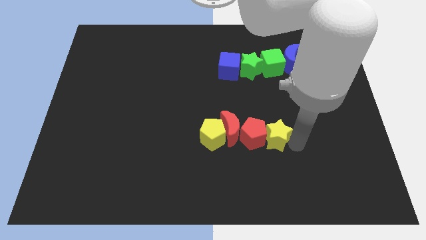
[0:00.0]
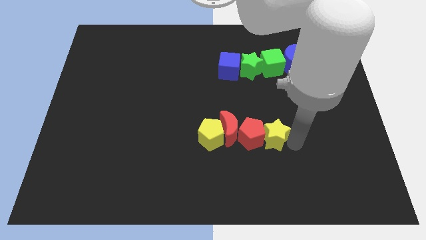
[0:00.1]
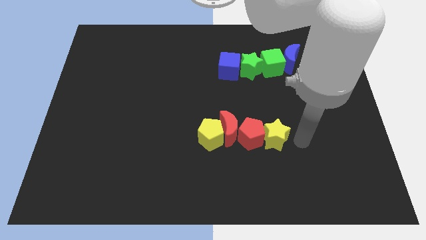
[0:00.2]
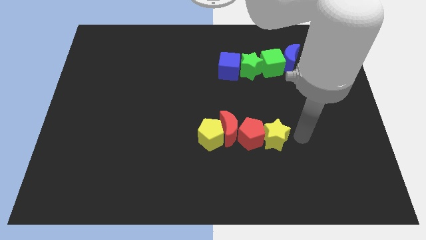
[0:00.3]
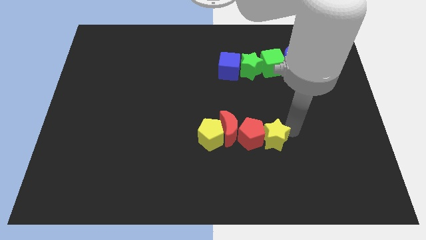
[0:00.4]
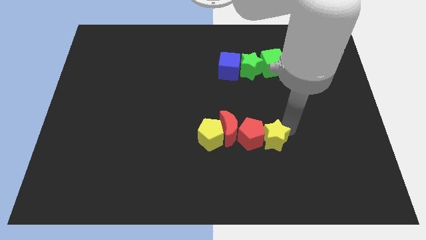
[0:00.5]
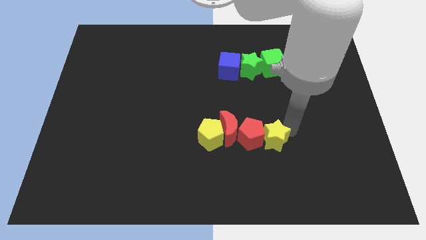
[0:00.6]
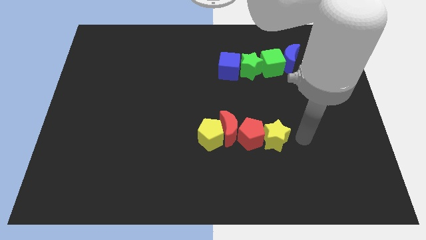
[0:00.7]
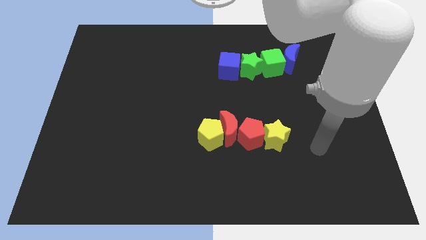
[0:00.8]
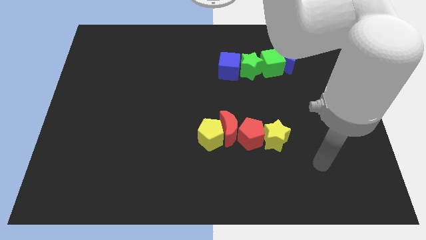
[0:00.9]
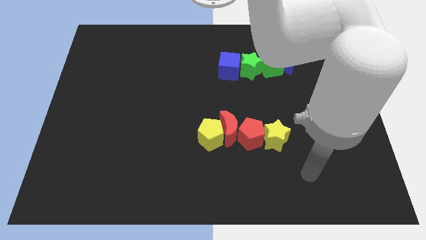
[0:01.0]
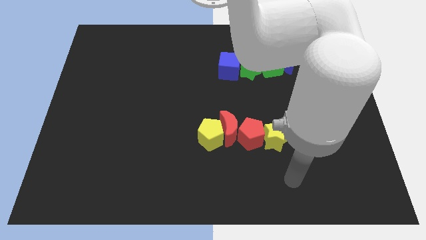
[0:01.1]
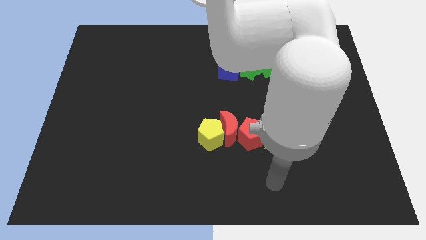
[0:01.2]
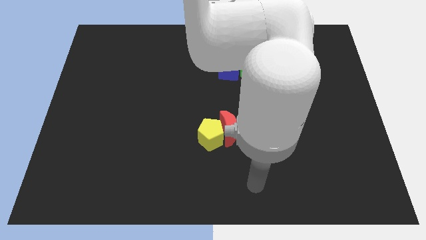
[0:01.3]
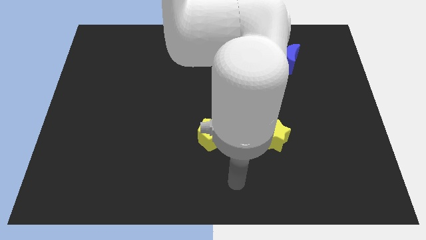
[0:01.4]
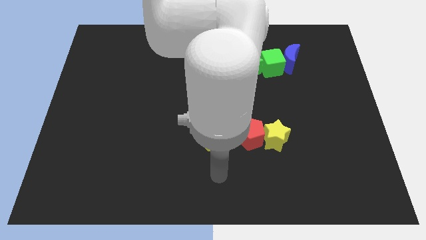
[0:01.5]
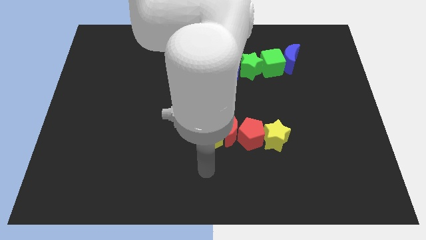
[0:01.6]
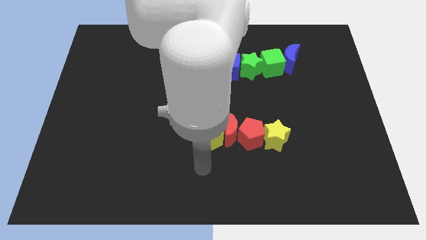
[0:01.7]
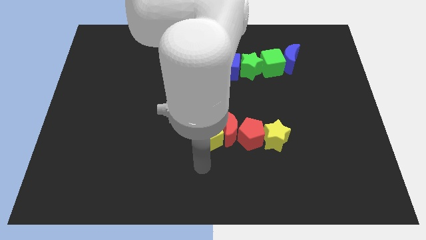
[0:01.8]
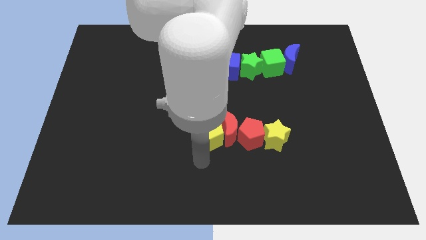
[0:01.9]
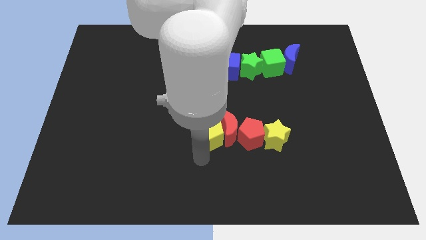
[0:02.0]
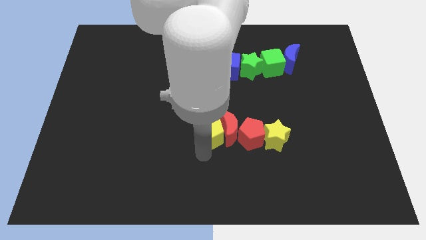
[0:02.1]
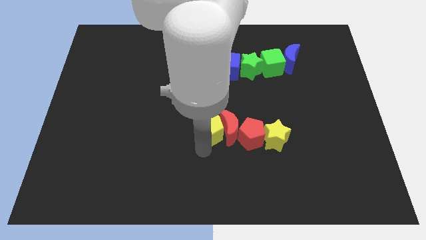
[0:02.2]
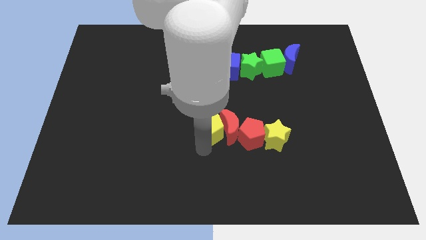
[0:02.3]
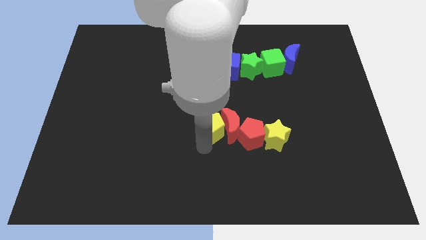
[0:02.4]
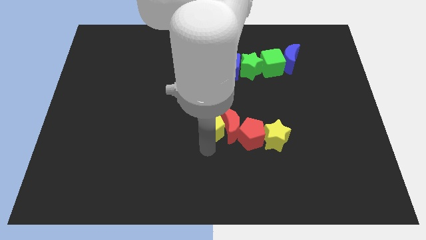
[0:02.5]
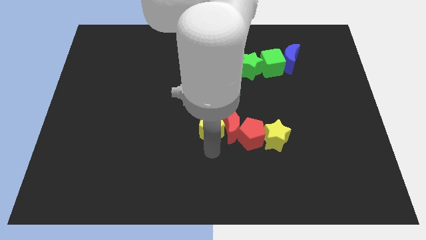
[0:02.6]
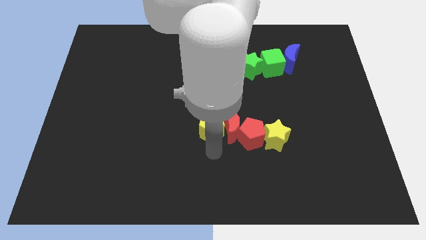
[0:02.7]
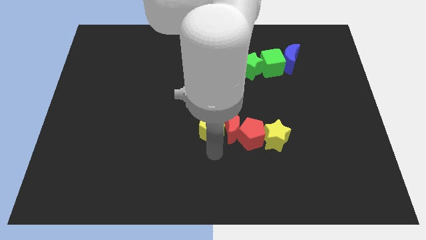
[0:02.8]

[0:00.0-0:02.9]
move your arm from yellow star to the bottom of yellow pentagon

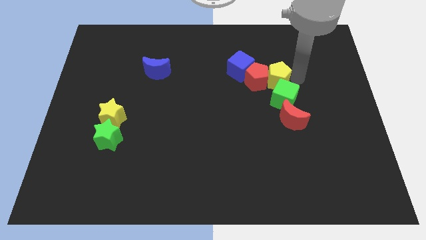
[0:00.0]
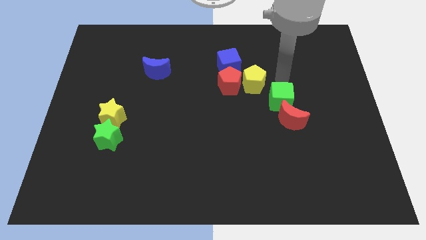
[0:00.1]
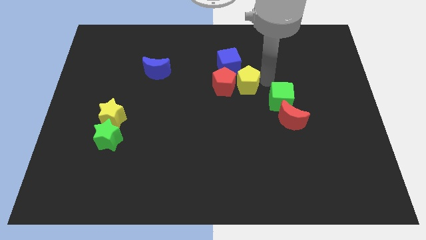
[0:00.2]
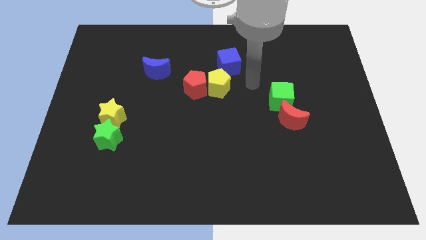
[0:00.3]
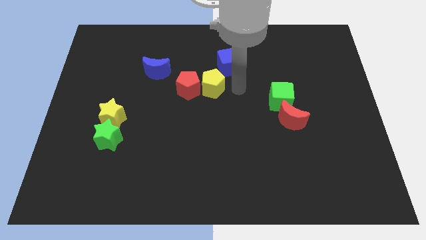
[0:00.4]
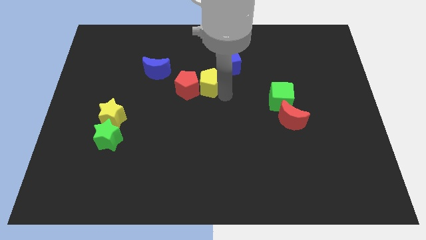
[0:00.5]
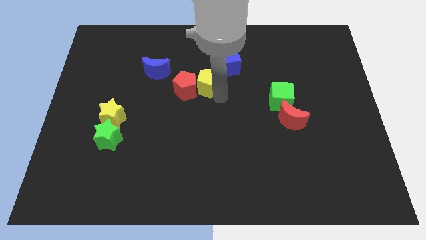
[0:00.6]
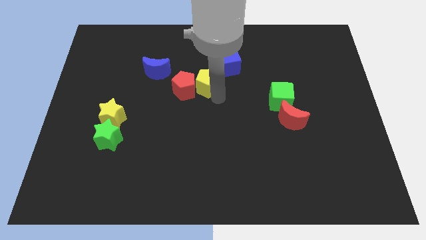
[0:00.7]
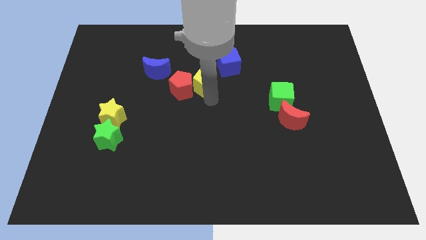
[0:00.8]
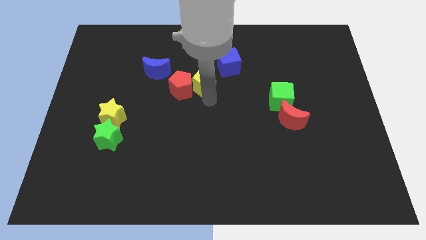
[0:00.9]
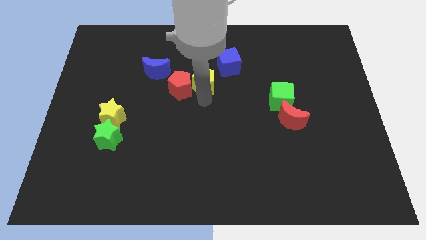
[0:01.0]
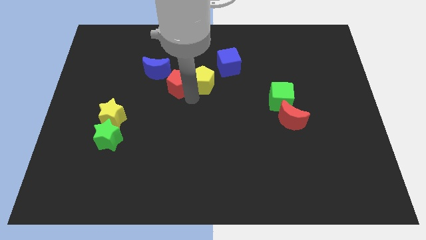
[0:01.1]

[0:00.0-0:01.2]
push the yellow pentagon and red pentagon away from the green cube

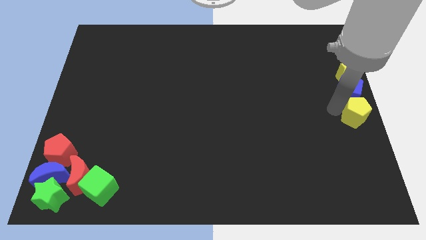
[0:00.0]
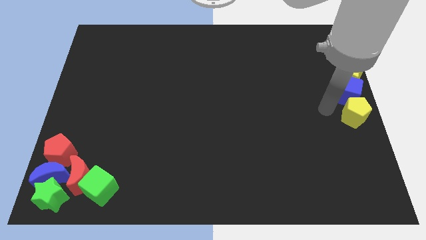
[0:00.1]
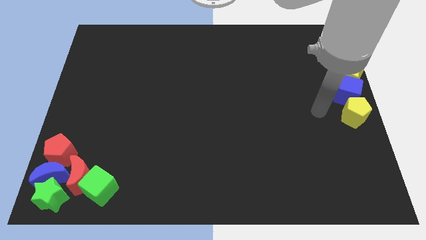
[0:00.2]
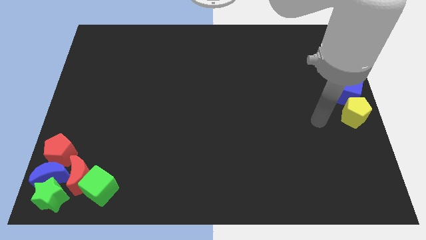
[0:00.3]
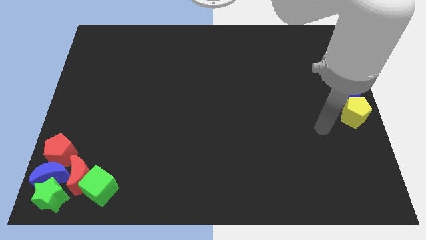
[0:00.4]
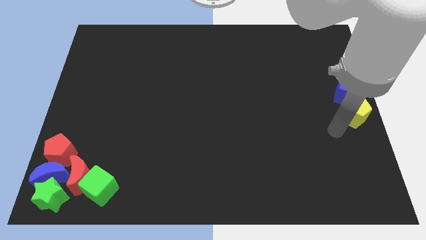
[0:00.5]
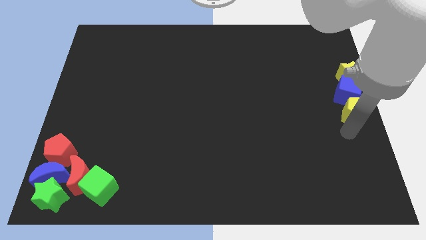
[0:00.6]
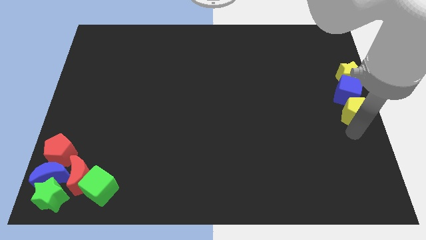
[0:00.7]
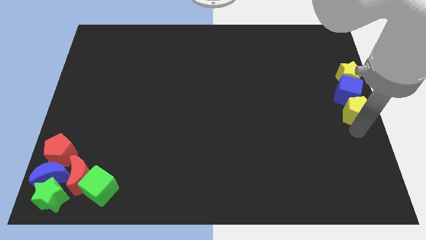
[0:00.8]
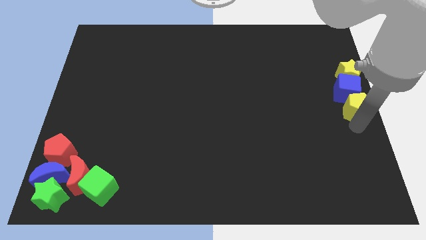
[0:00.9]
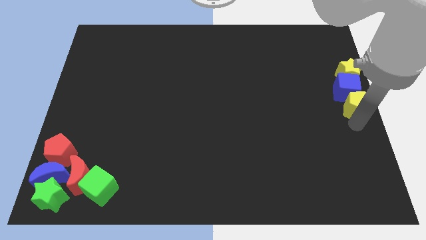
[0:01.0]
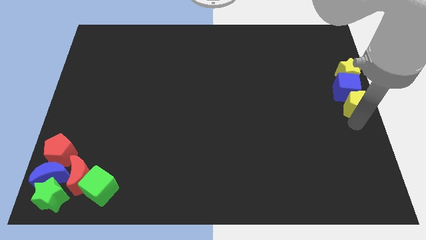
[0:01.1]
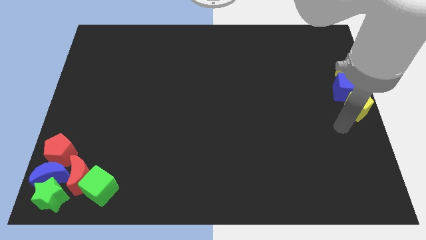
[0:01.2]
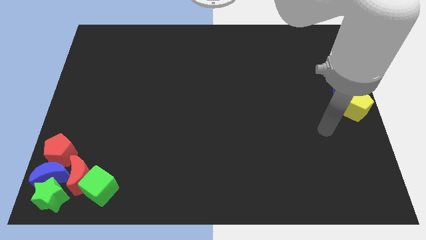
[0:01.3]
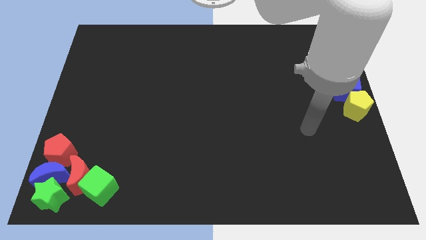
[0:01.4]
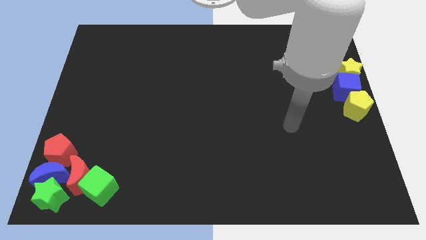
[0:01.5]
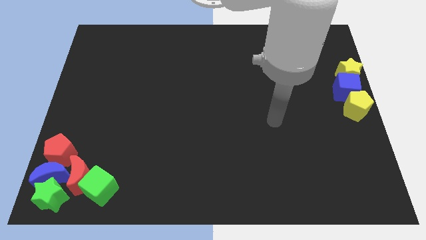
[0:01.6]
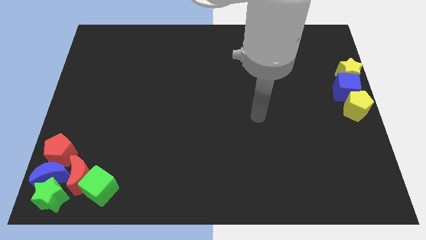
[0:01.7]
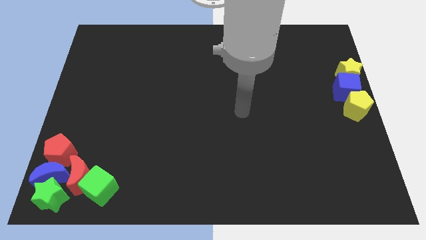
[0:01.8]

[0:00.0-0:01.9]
push the yellow pentagon into the blue cube

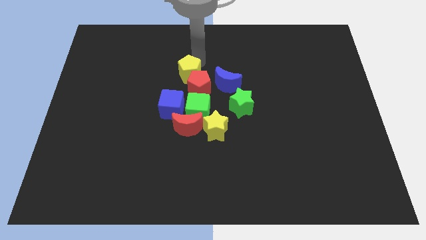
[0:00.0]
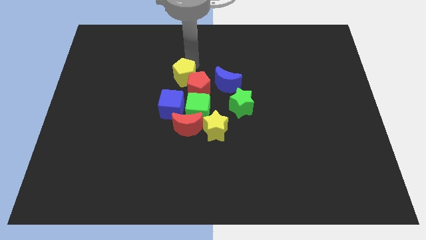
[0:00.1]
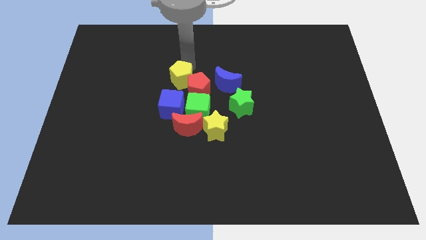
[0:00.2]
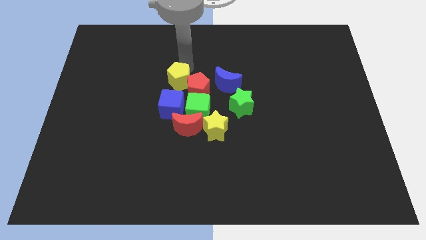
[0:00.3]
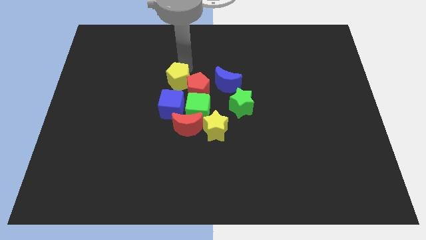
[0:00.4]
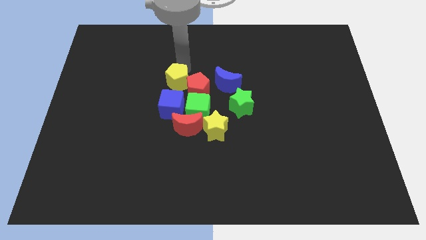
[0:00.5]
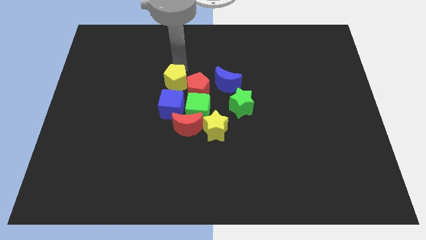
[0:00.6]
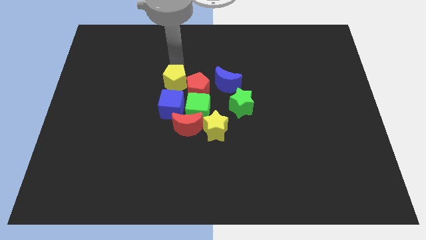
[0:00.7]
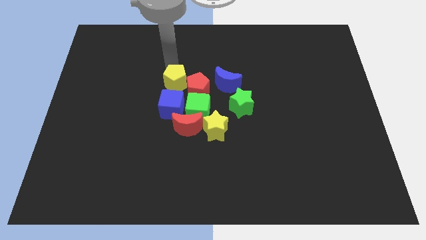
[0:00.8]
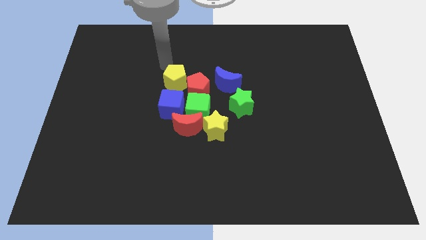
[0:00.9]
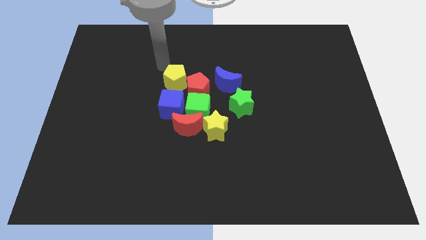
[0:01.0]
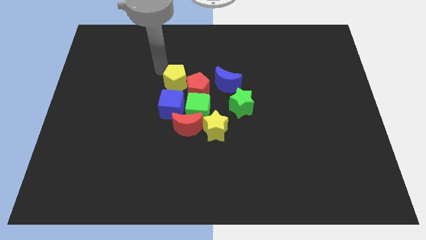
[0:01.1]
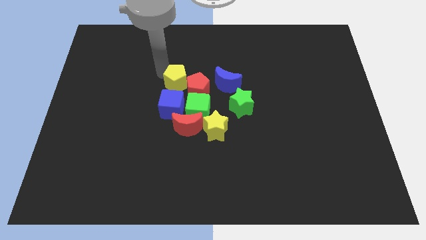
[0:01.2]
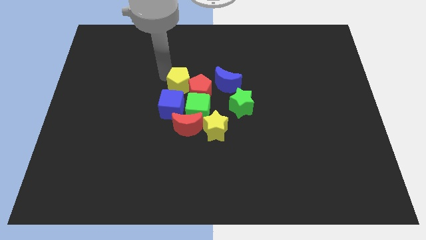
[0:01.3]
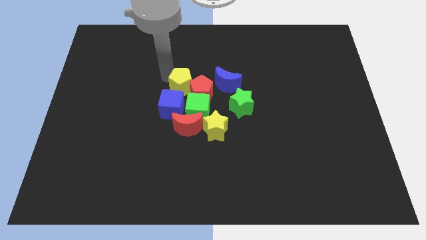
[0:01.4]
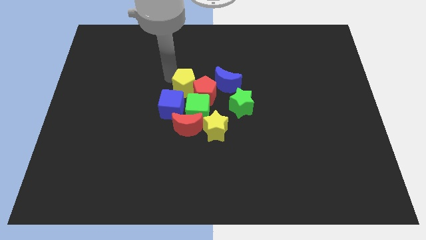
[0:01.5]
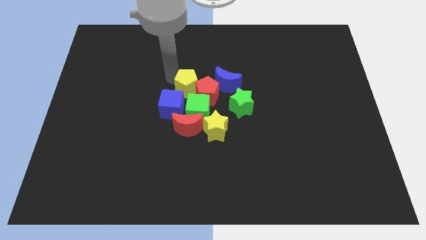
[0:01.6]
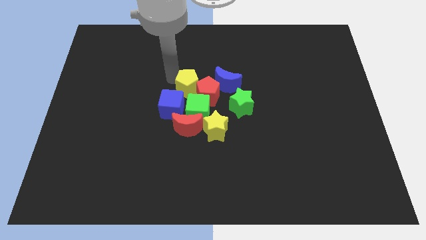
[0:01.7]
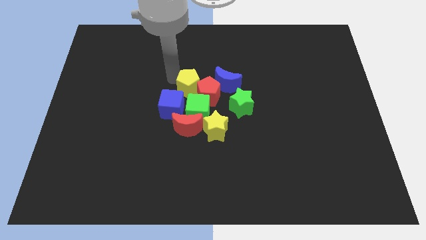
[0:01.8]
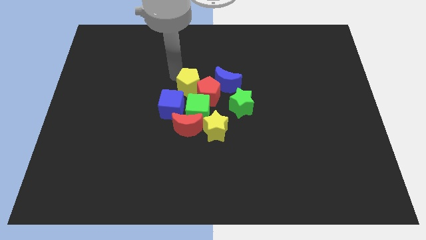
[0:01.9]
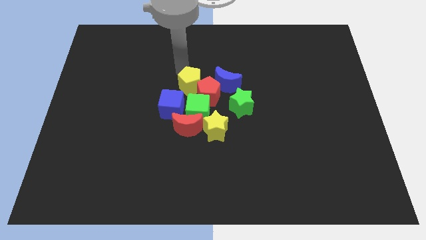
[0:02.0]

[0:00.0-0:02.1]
push yellow pentagon along with red pentagon into group of blocks

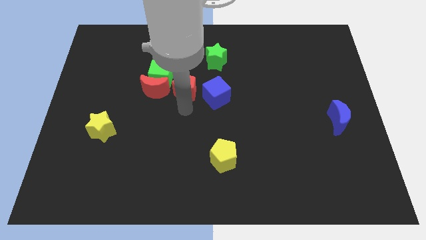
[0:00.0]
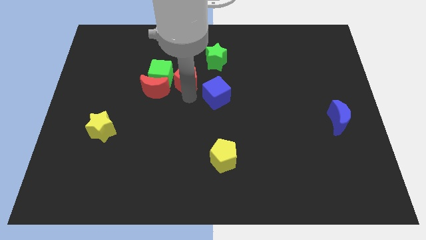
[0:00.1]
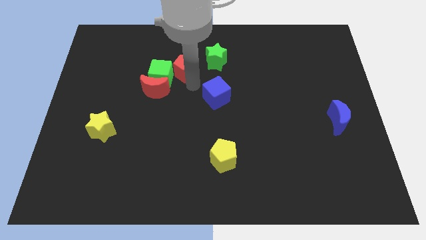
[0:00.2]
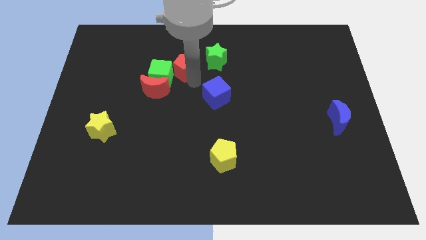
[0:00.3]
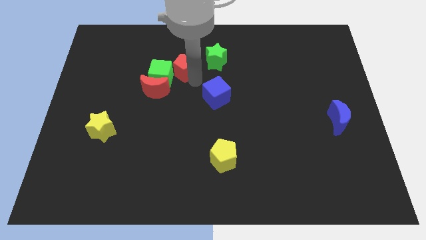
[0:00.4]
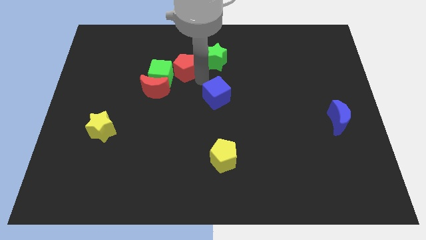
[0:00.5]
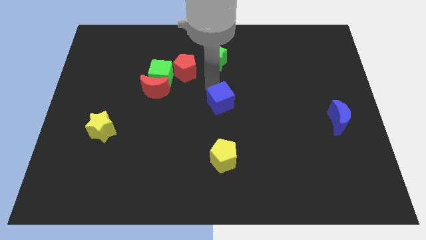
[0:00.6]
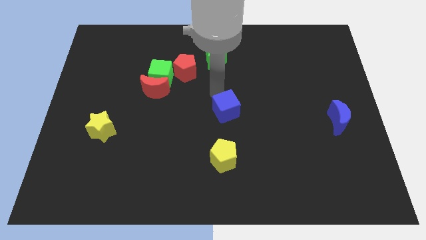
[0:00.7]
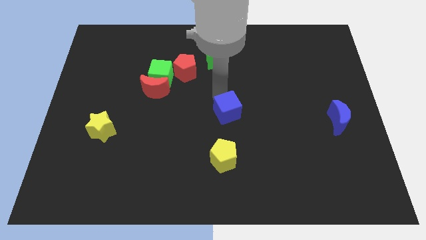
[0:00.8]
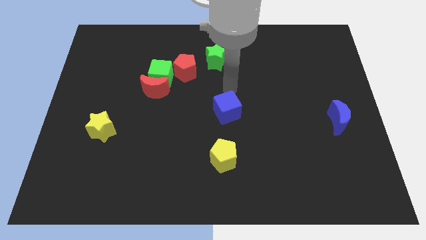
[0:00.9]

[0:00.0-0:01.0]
place the blue cube vertically below the green star
